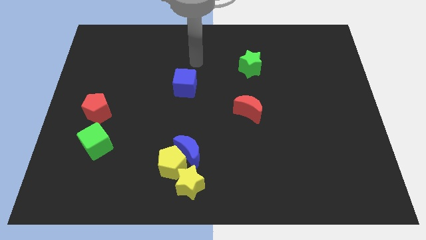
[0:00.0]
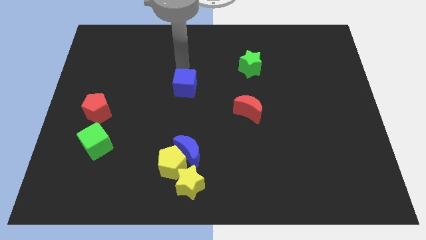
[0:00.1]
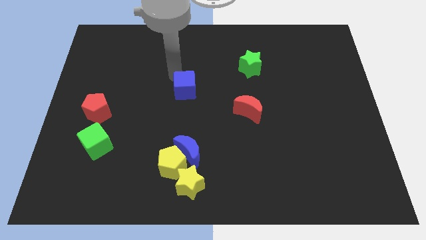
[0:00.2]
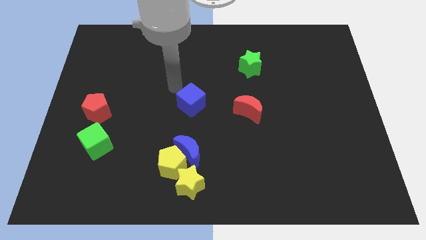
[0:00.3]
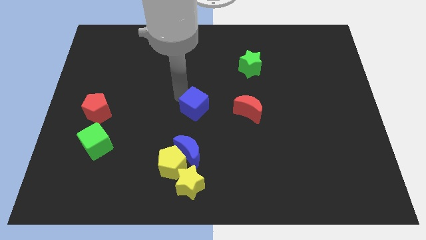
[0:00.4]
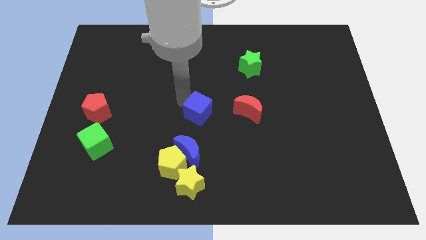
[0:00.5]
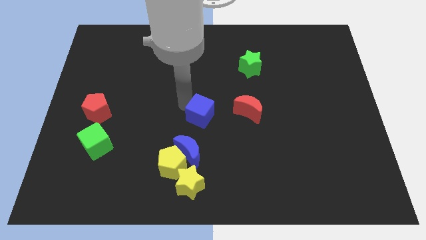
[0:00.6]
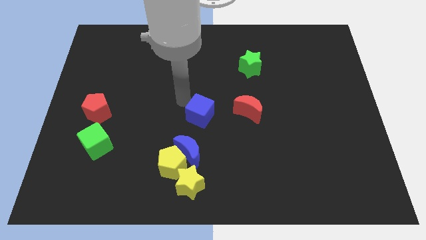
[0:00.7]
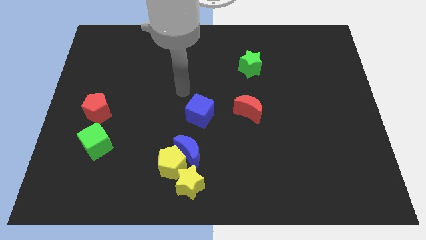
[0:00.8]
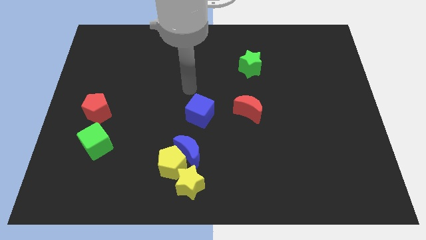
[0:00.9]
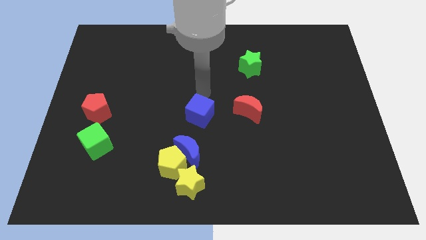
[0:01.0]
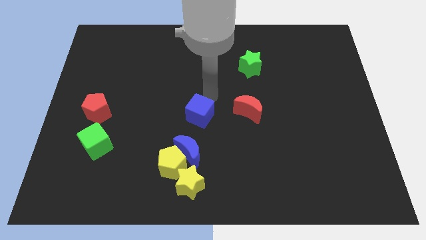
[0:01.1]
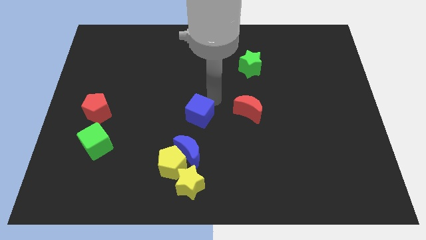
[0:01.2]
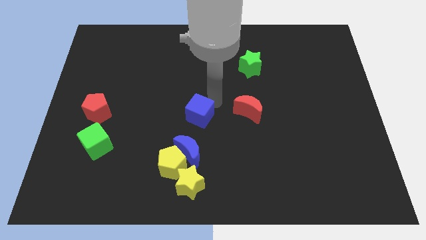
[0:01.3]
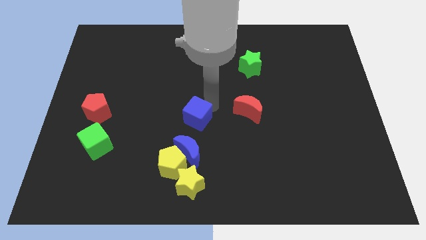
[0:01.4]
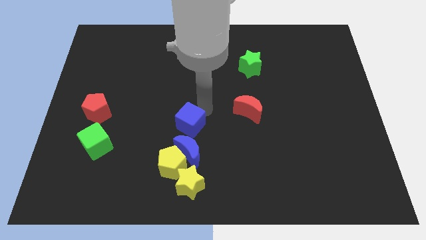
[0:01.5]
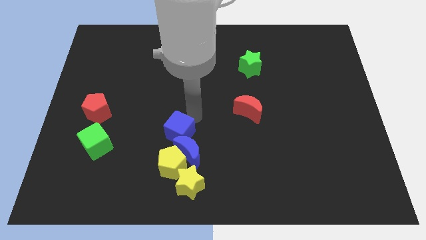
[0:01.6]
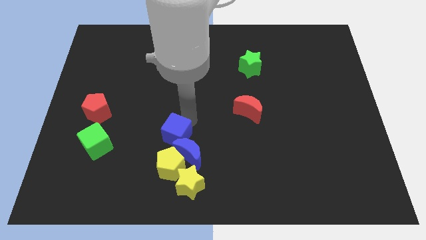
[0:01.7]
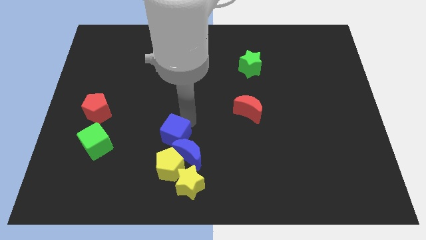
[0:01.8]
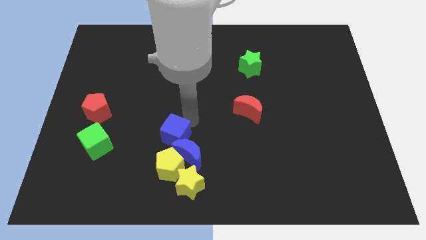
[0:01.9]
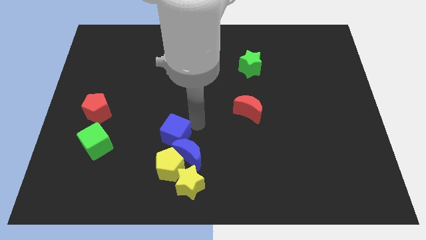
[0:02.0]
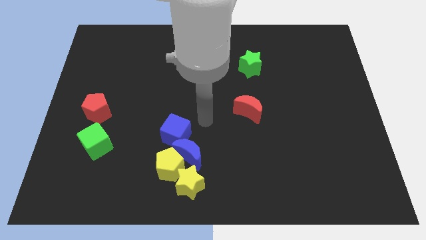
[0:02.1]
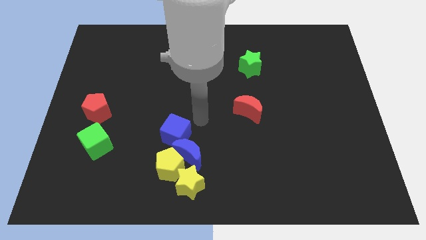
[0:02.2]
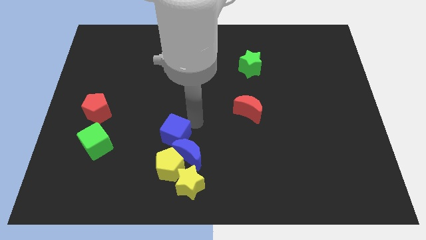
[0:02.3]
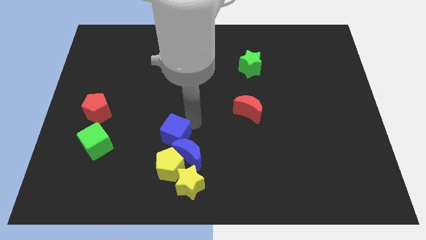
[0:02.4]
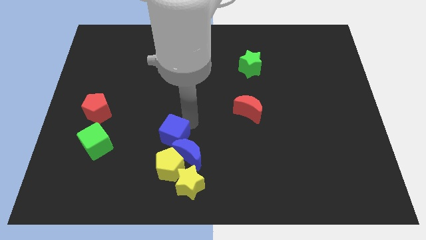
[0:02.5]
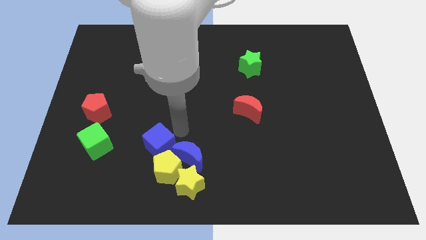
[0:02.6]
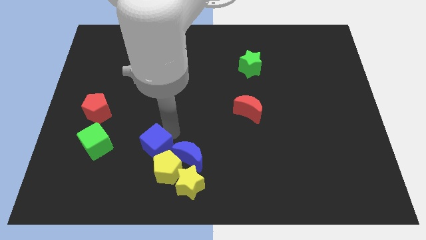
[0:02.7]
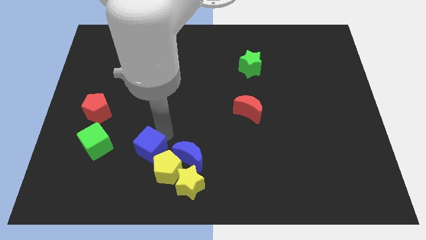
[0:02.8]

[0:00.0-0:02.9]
push the blue cube into the group of blocks

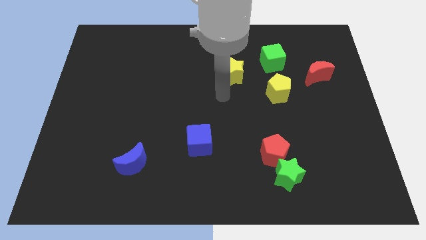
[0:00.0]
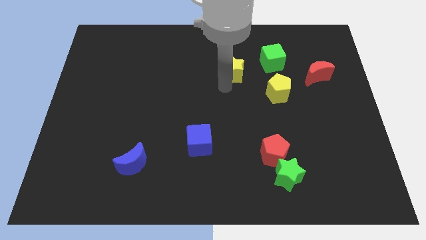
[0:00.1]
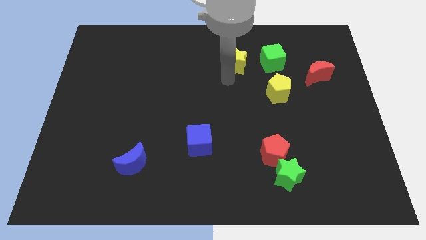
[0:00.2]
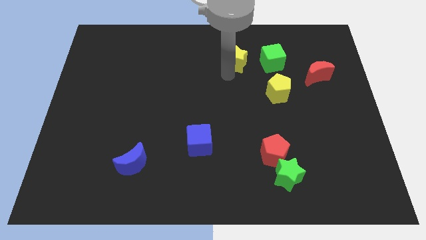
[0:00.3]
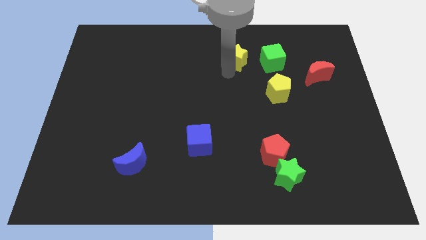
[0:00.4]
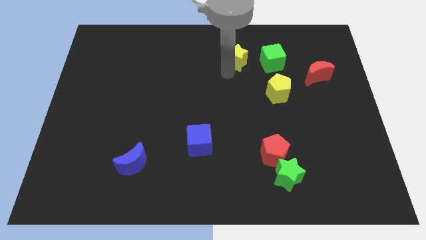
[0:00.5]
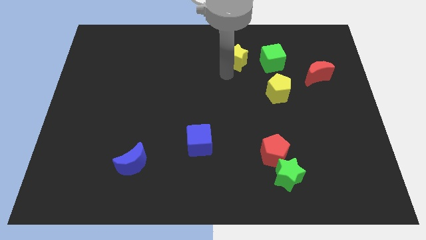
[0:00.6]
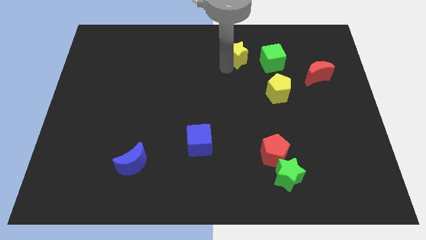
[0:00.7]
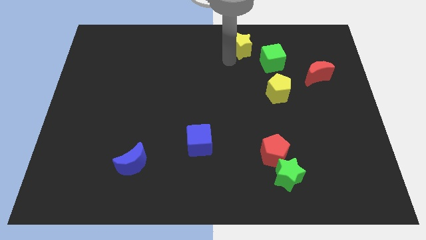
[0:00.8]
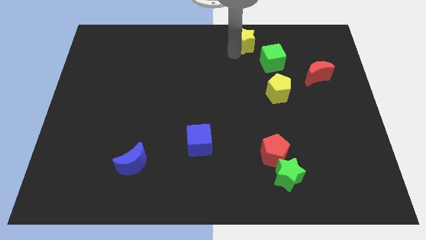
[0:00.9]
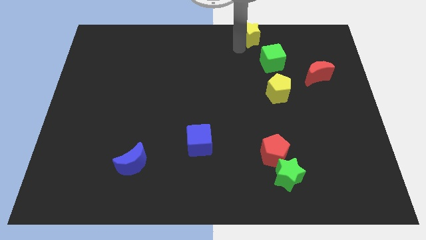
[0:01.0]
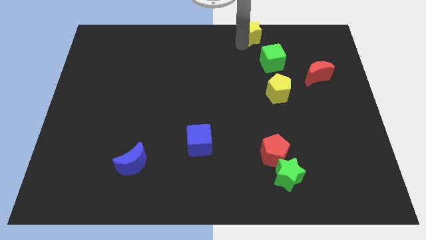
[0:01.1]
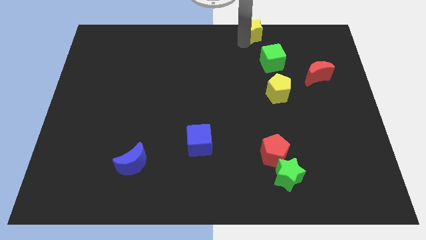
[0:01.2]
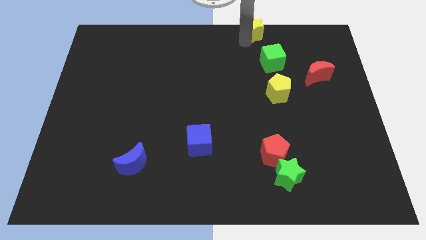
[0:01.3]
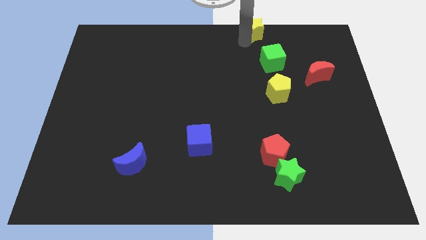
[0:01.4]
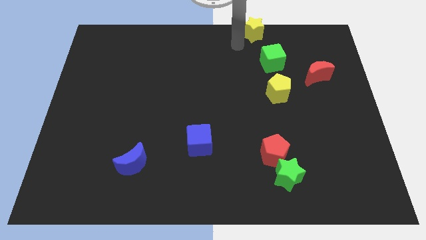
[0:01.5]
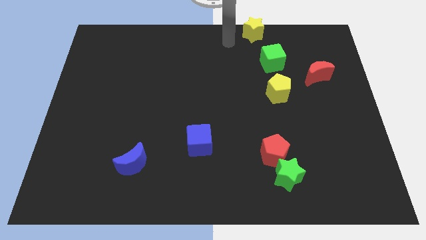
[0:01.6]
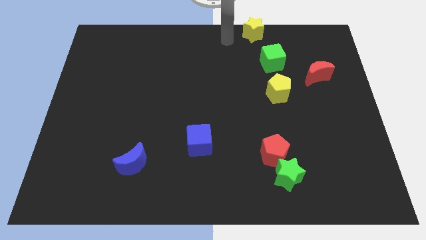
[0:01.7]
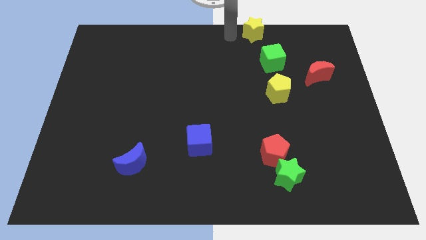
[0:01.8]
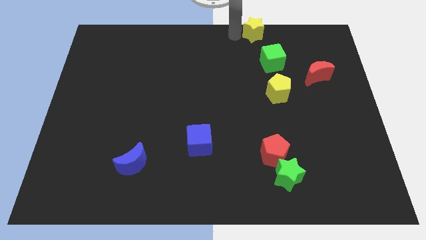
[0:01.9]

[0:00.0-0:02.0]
push the yellow star to the top of the board

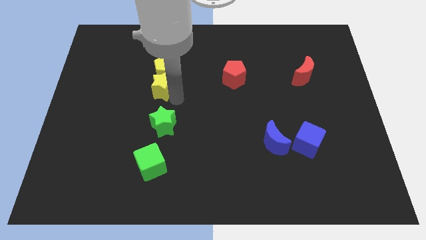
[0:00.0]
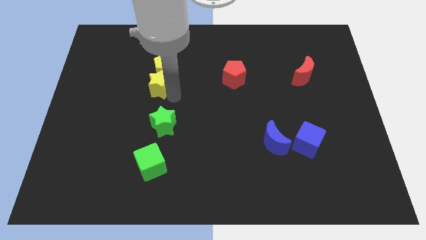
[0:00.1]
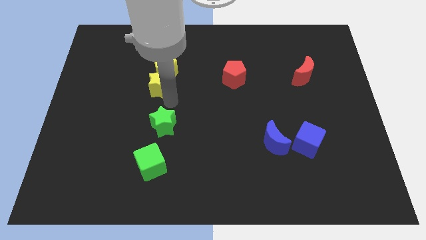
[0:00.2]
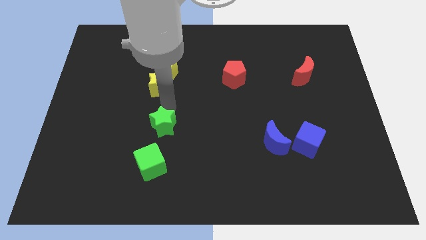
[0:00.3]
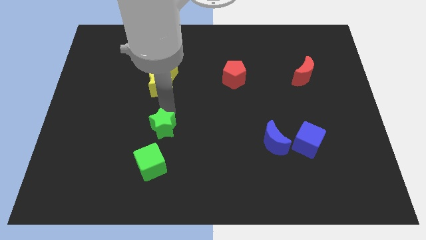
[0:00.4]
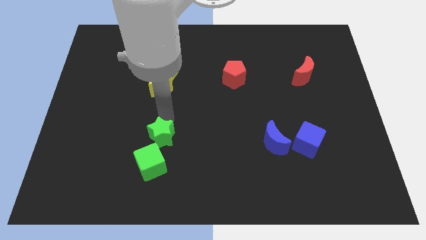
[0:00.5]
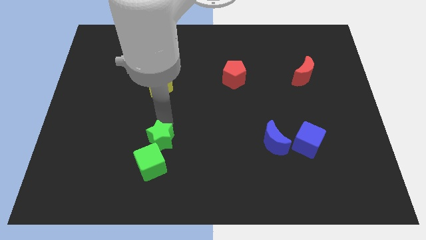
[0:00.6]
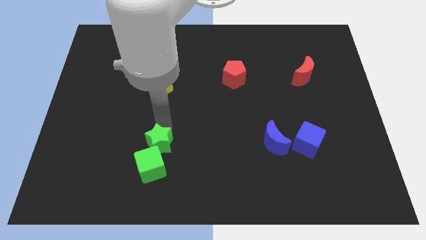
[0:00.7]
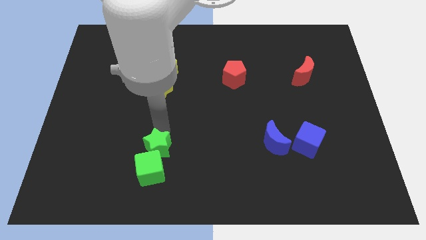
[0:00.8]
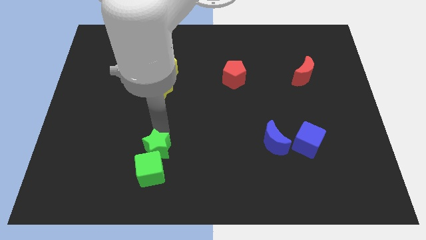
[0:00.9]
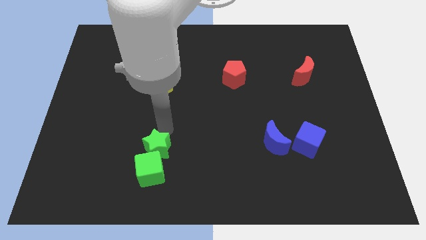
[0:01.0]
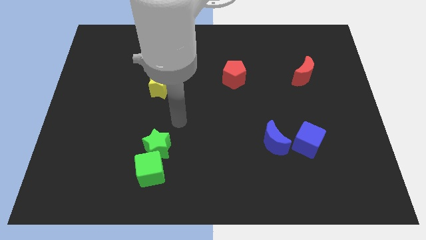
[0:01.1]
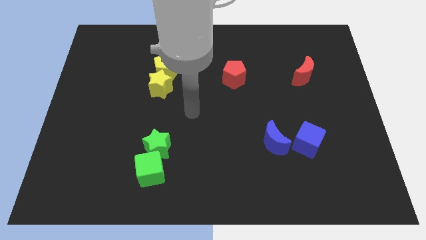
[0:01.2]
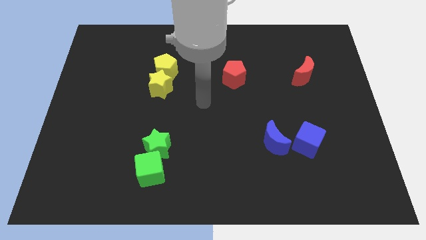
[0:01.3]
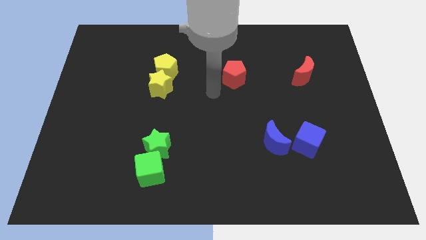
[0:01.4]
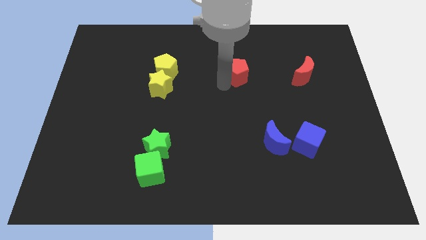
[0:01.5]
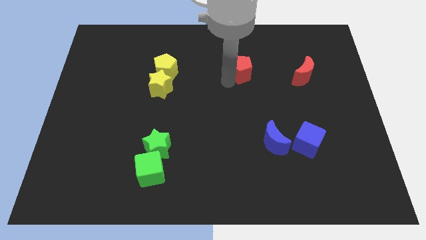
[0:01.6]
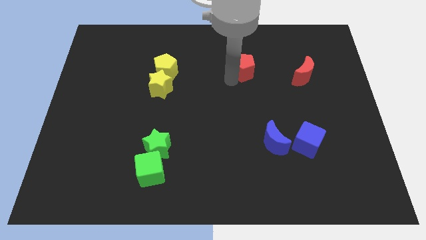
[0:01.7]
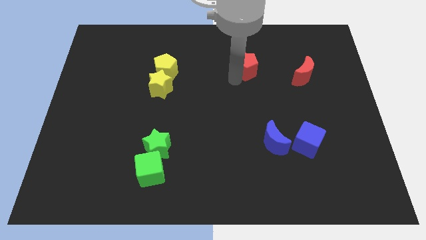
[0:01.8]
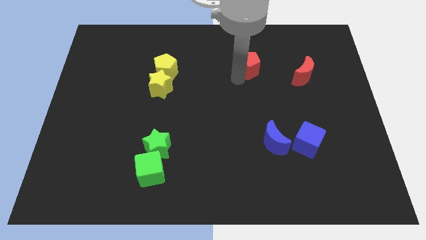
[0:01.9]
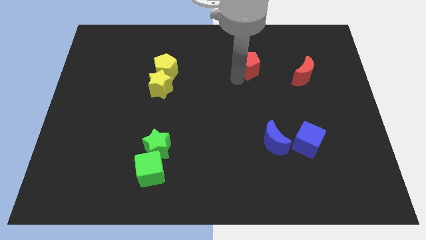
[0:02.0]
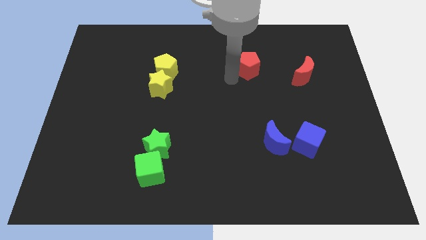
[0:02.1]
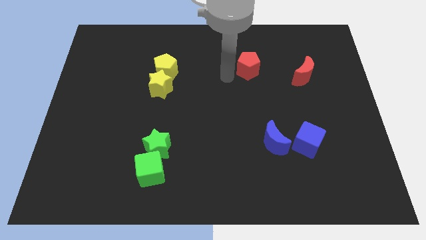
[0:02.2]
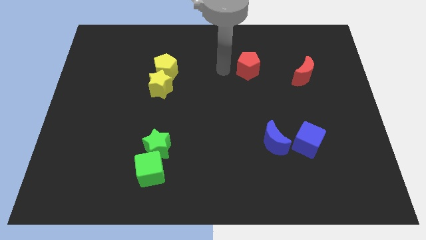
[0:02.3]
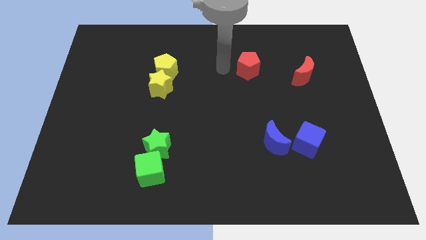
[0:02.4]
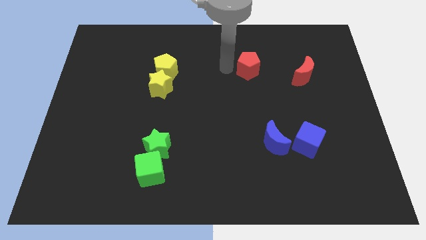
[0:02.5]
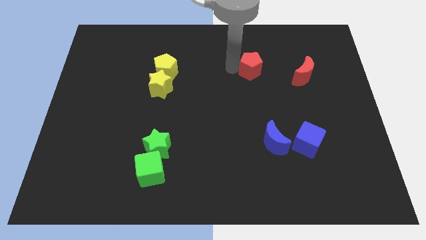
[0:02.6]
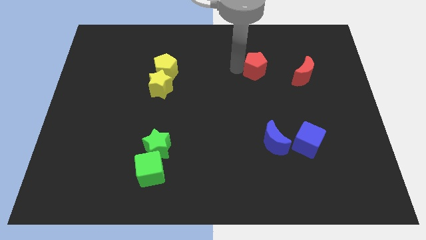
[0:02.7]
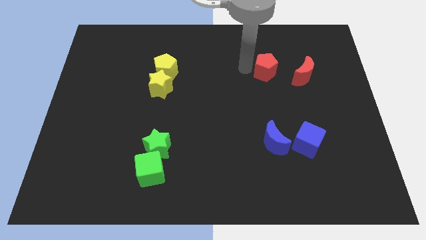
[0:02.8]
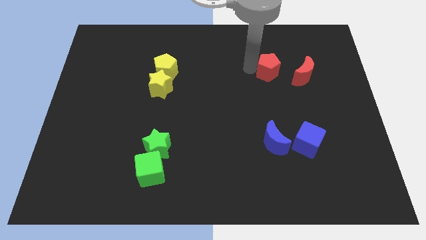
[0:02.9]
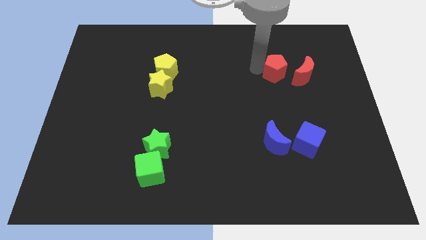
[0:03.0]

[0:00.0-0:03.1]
push red pentagon above blue crescent

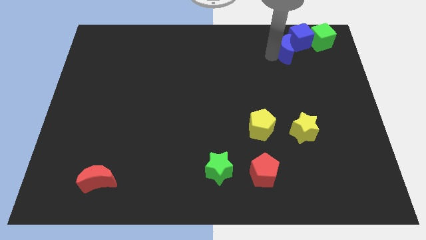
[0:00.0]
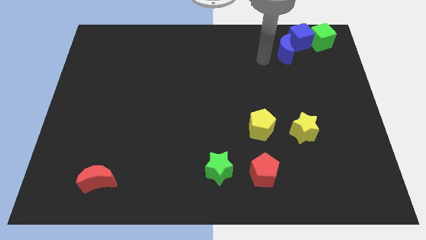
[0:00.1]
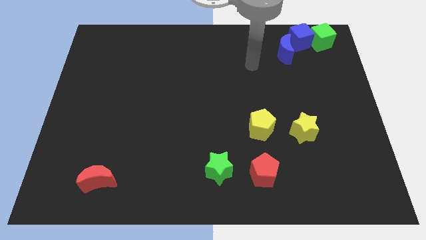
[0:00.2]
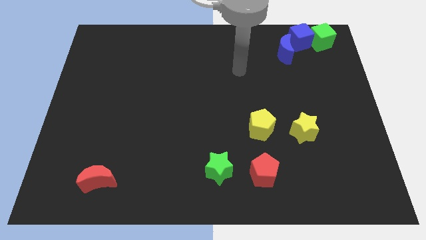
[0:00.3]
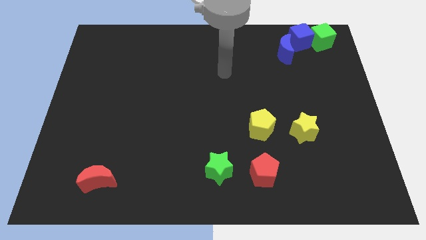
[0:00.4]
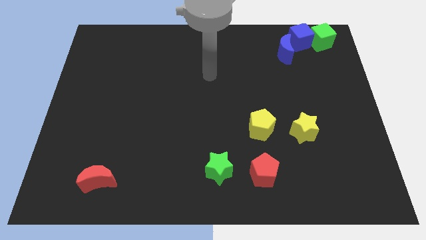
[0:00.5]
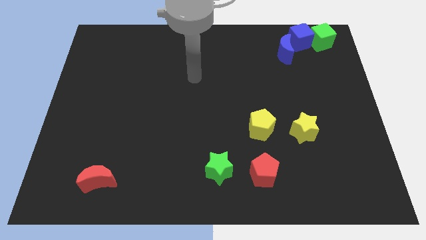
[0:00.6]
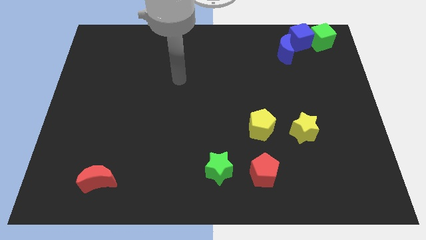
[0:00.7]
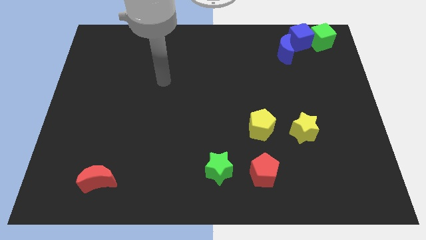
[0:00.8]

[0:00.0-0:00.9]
move the arm to the center of the board
